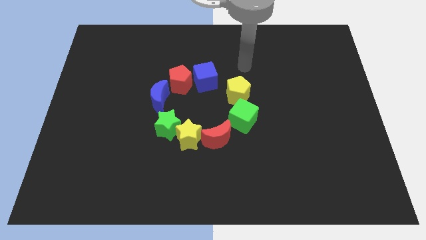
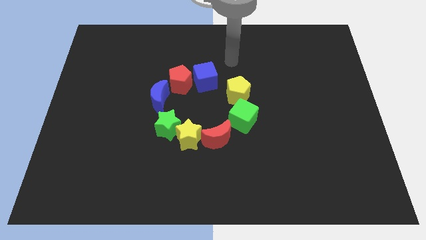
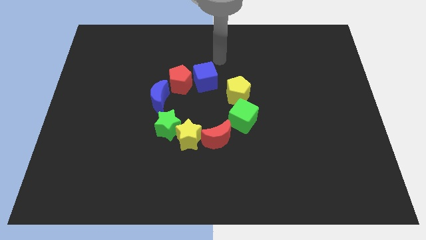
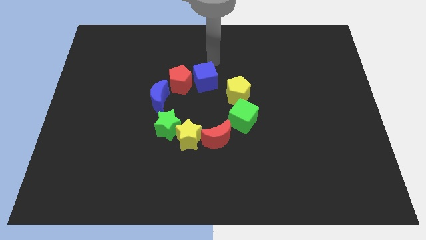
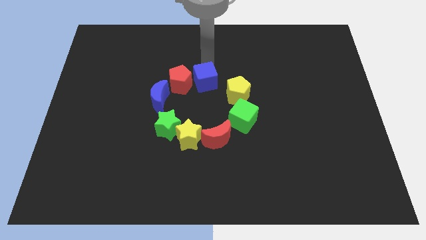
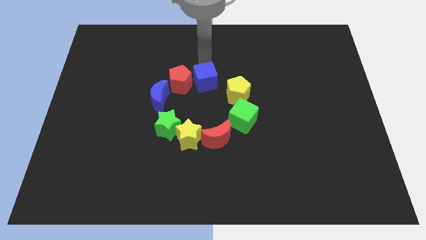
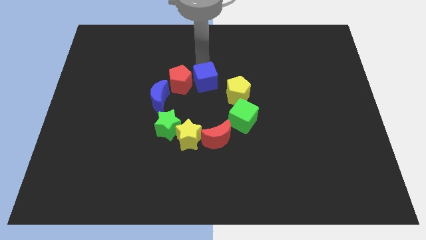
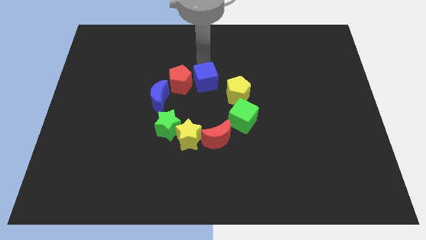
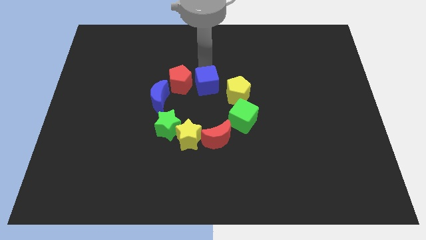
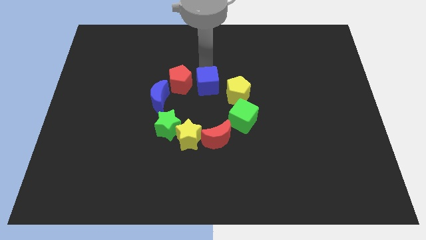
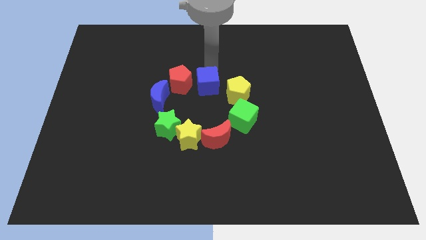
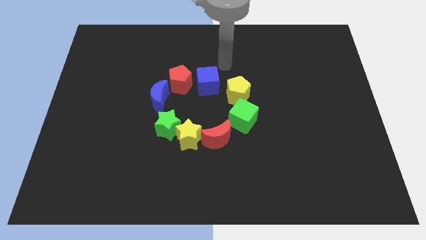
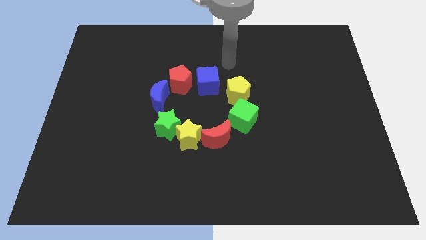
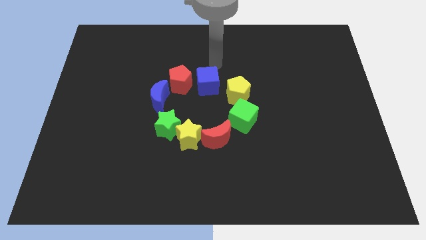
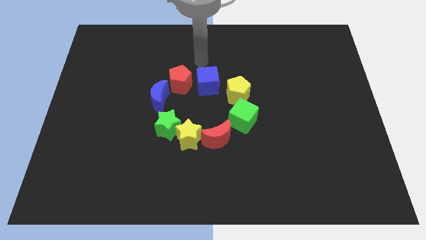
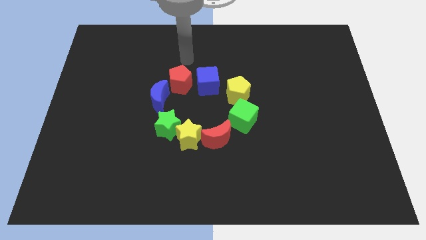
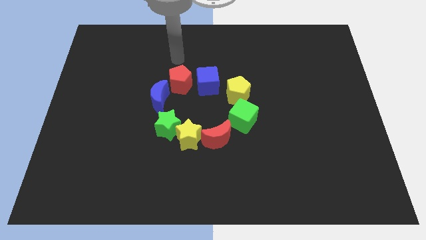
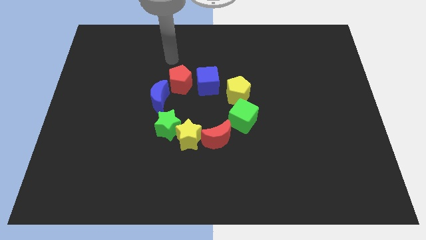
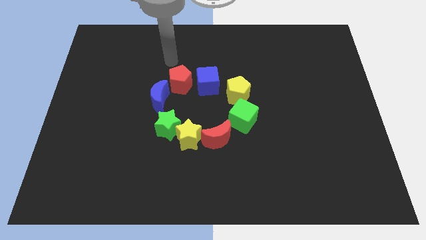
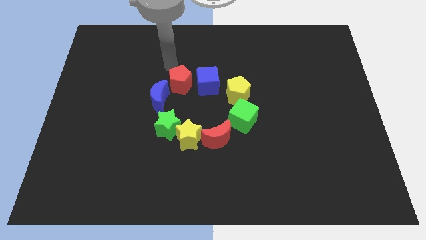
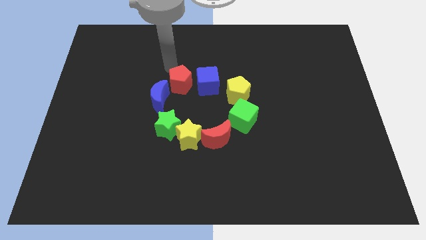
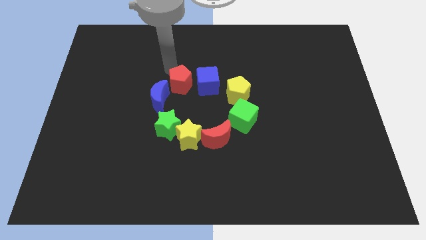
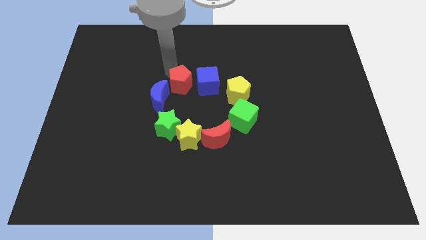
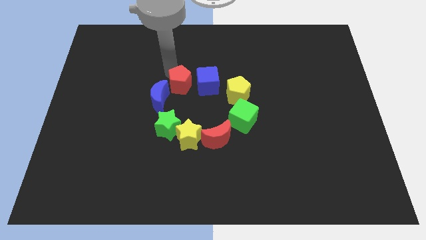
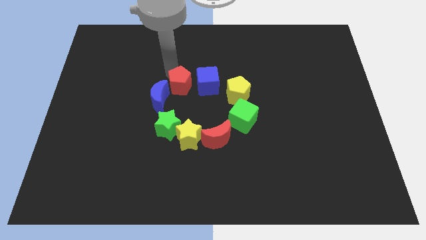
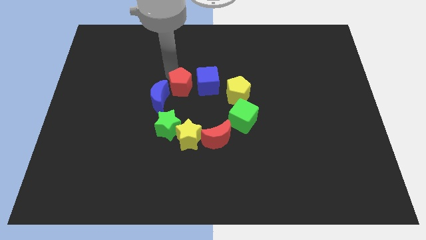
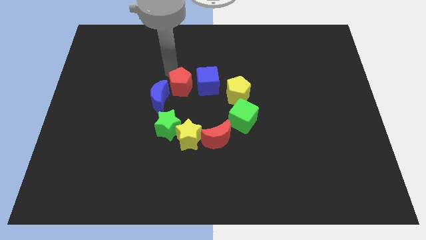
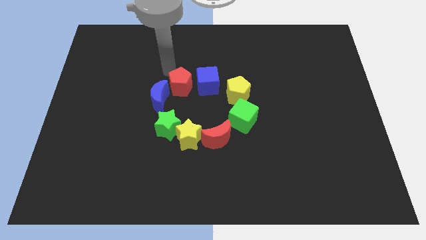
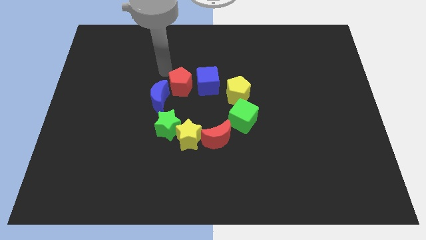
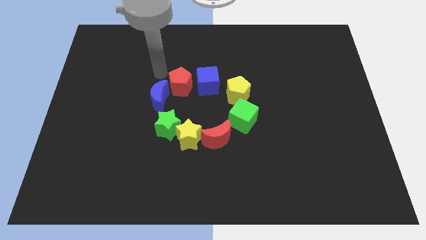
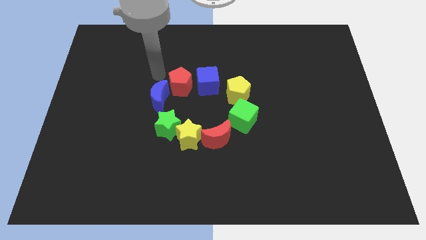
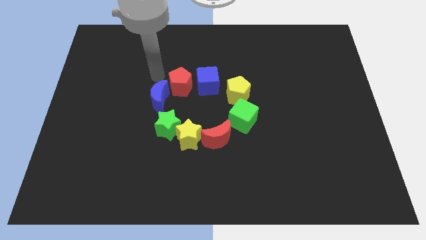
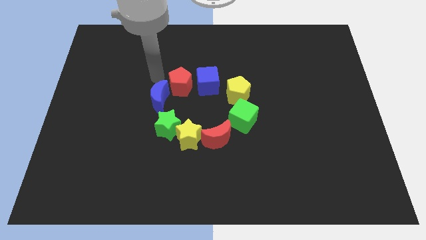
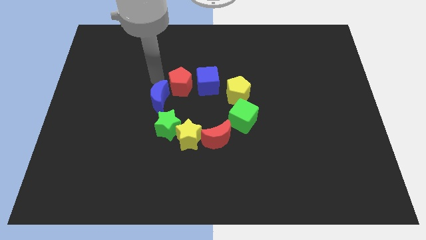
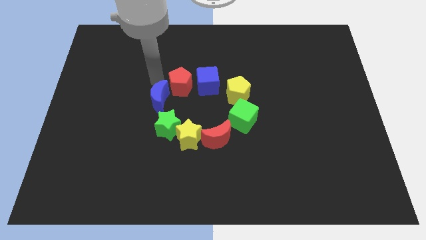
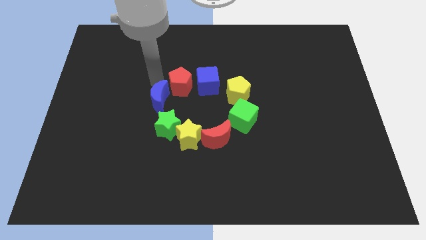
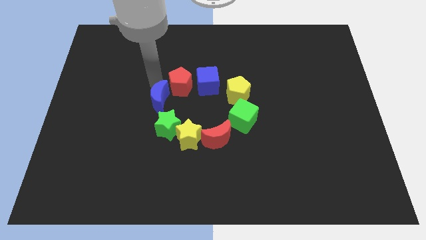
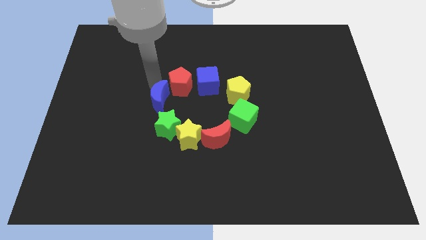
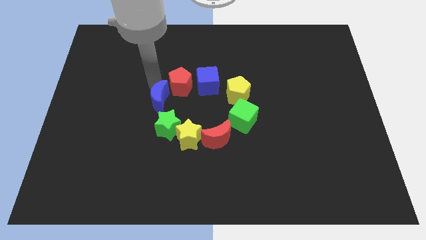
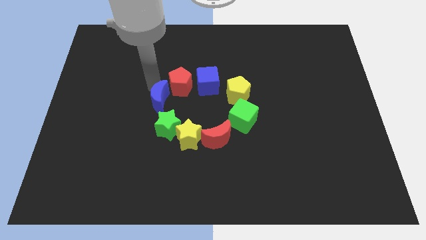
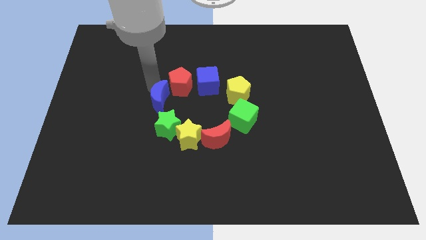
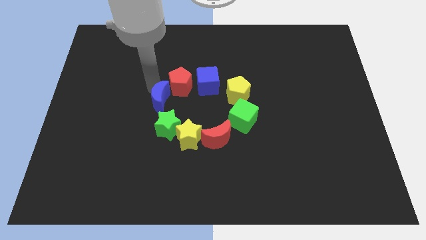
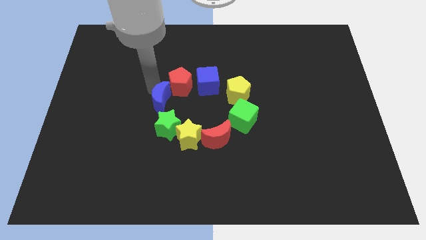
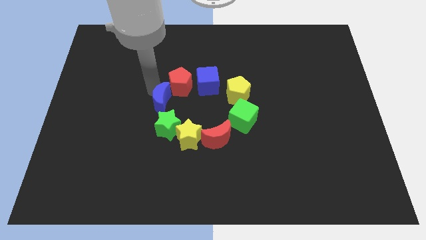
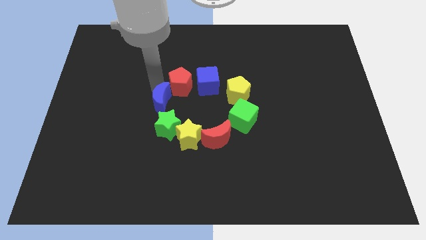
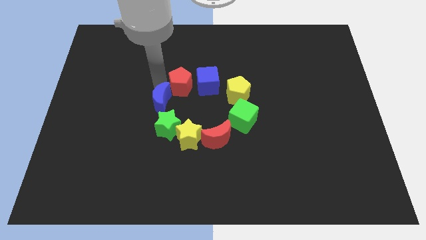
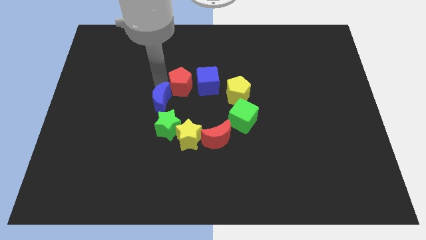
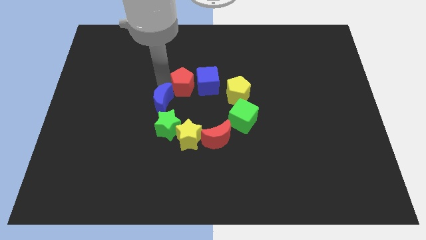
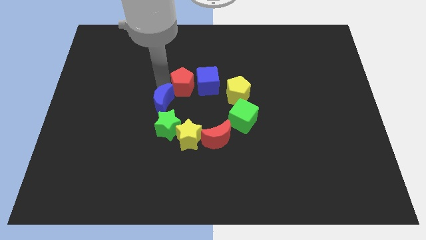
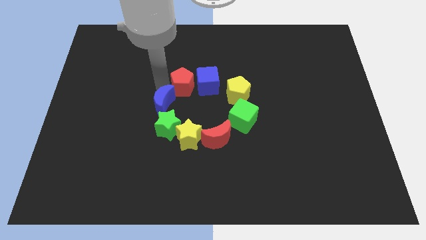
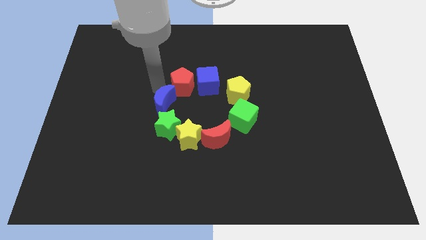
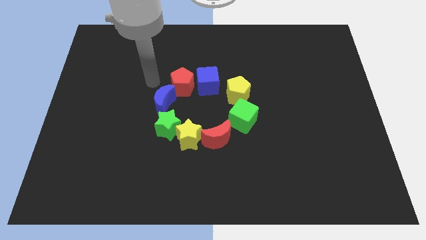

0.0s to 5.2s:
slightly move down the blue cube to the center of the board

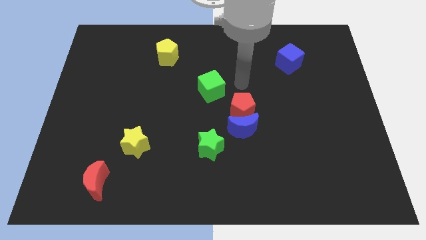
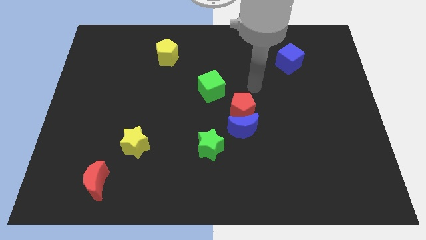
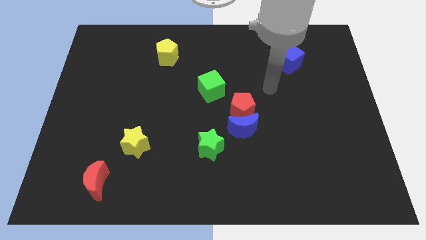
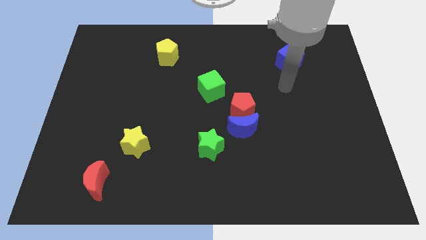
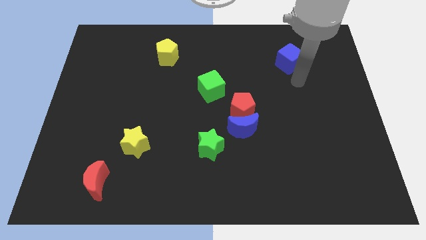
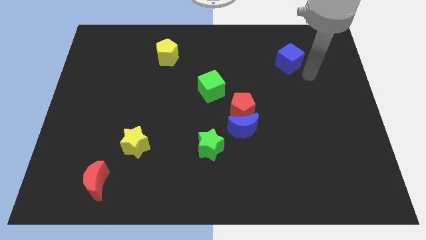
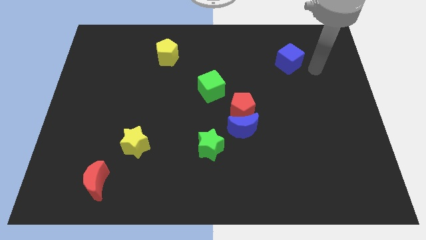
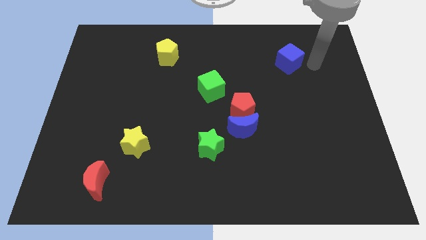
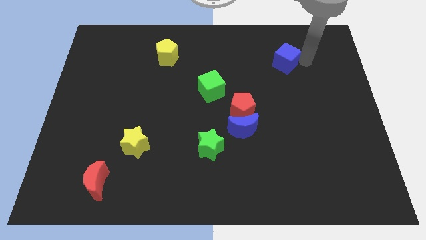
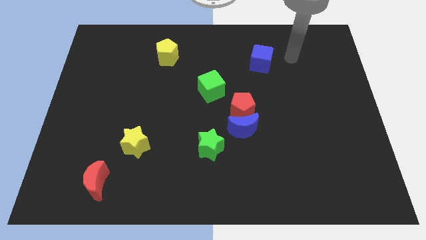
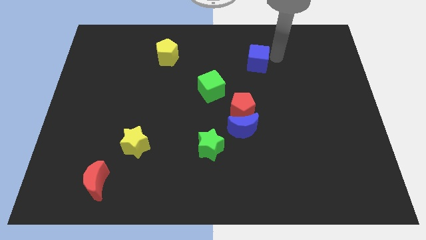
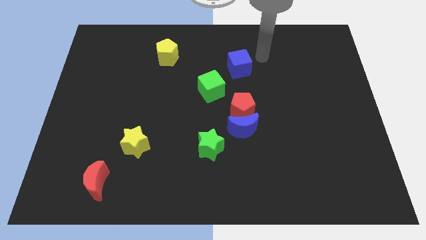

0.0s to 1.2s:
move your arm away from the green cube

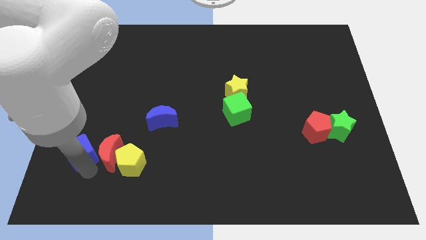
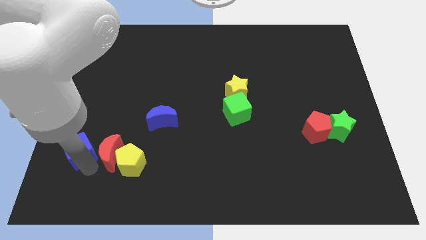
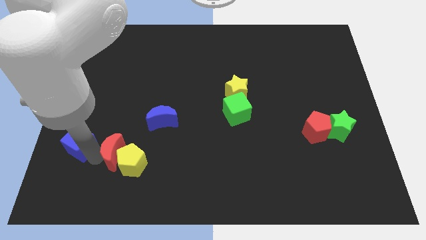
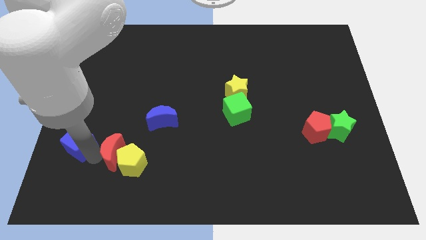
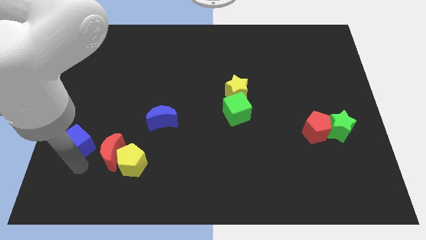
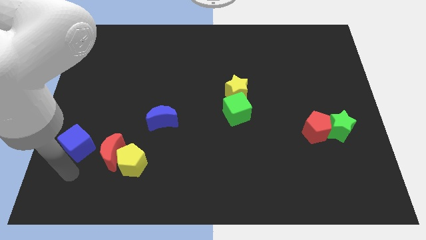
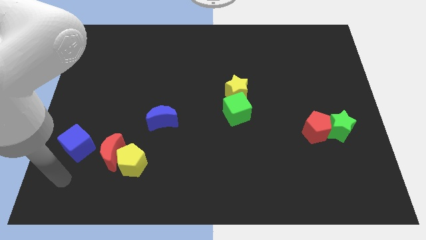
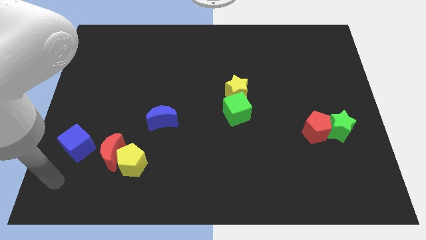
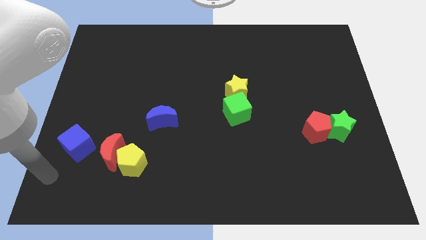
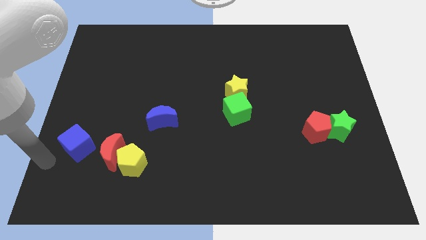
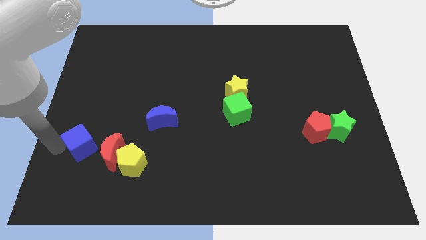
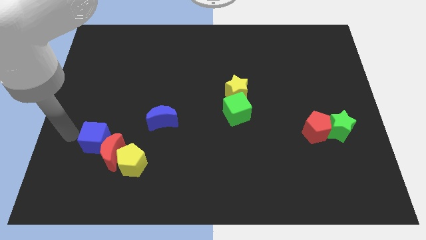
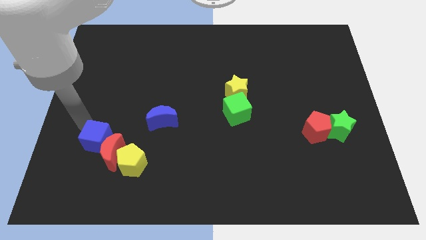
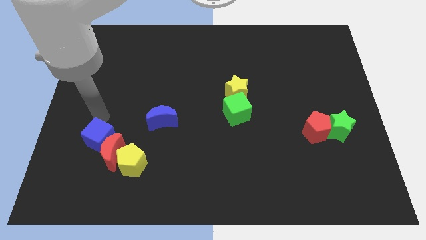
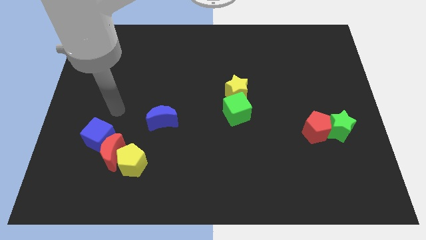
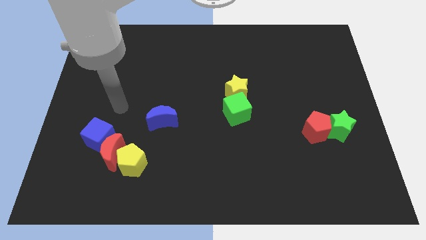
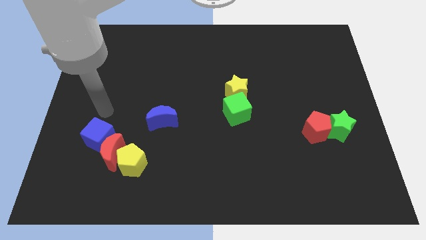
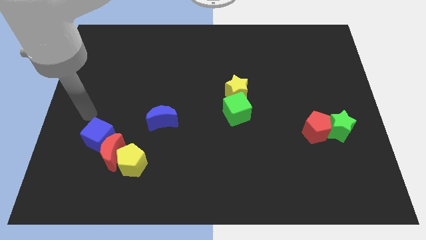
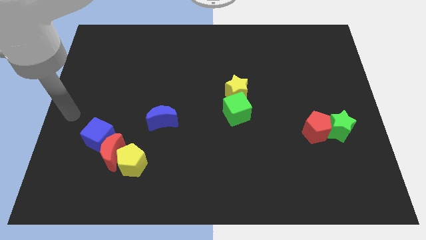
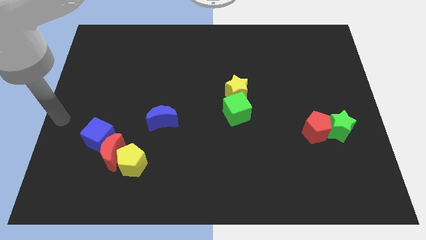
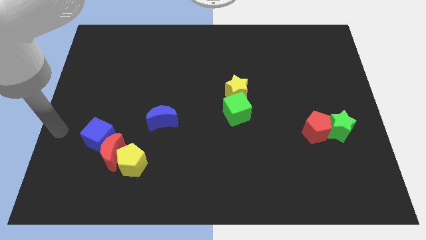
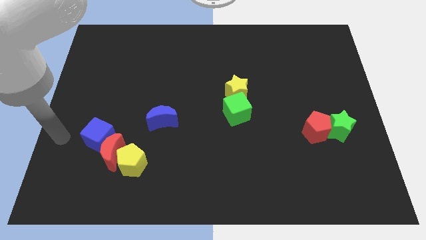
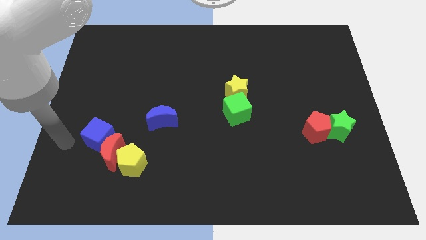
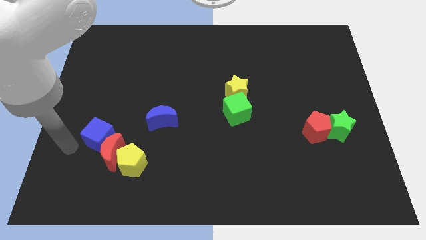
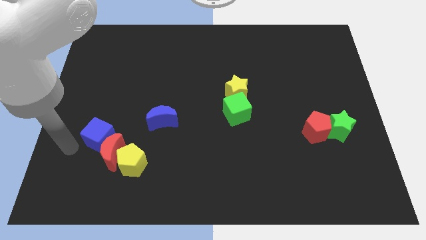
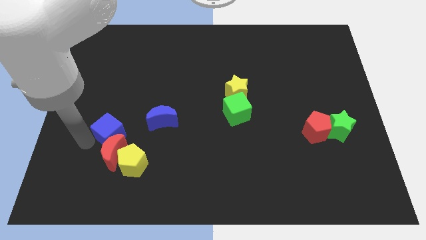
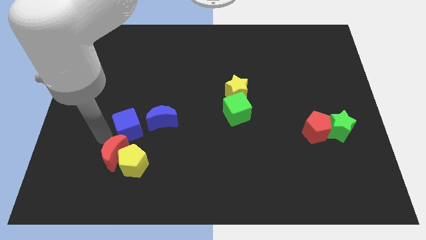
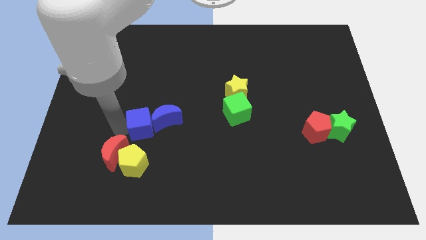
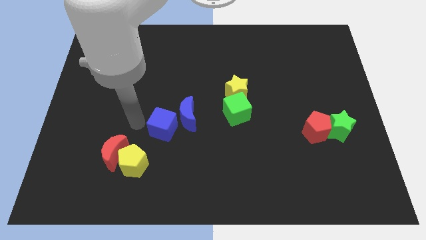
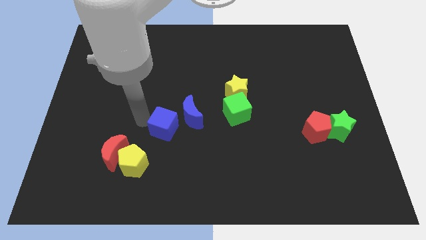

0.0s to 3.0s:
move the blue cube into the blue crescent
